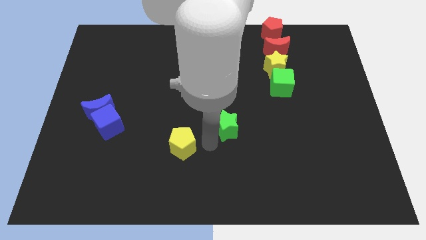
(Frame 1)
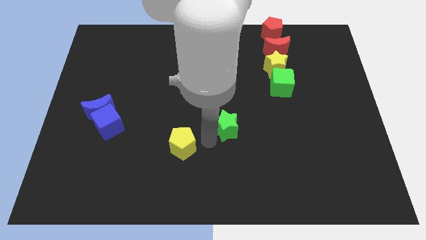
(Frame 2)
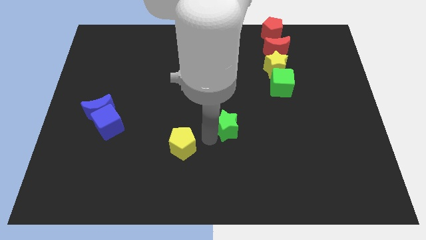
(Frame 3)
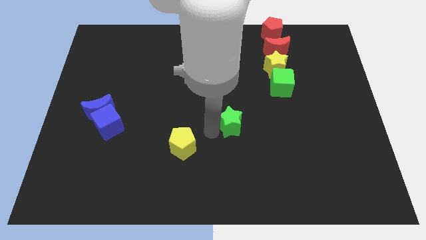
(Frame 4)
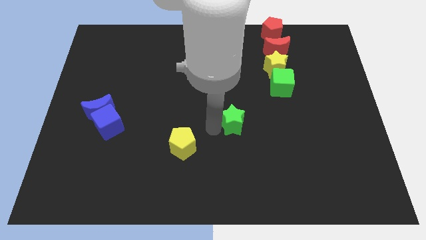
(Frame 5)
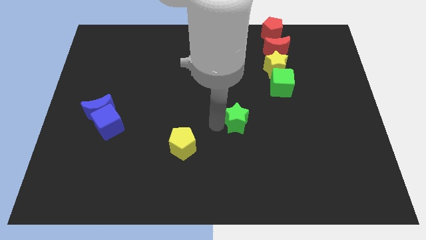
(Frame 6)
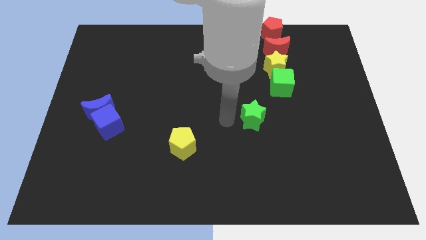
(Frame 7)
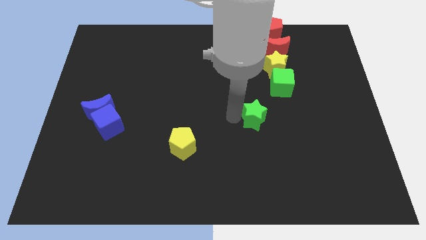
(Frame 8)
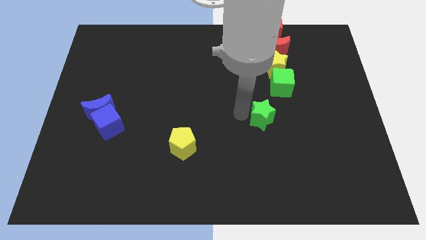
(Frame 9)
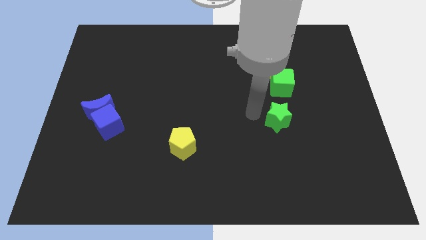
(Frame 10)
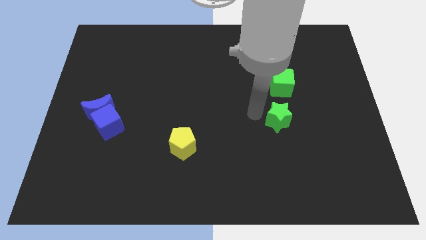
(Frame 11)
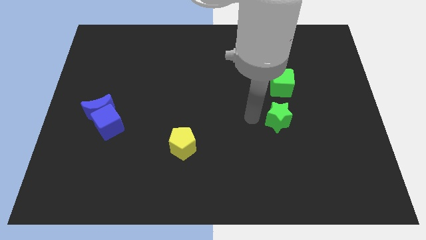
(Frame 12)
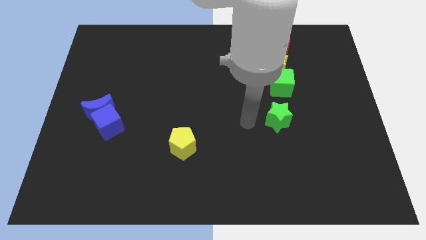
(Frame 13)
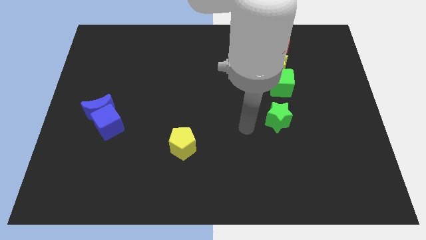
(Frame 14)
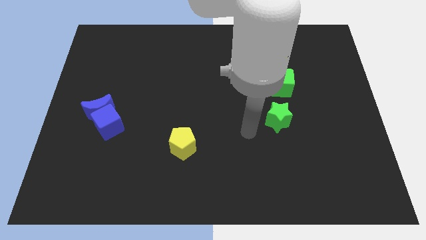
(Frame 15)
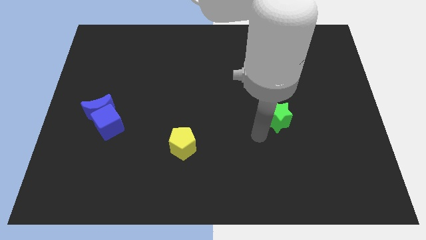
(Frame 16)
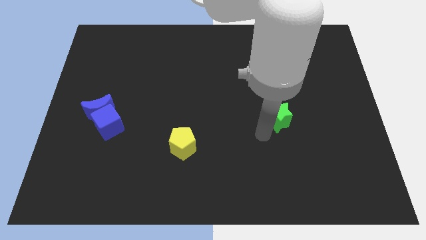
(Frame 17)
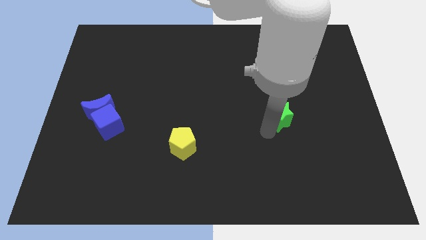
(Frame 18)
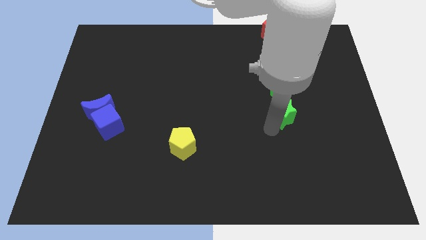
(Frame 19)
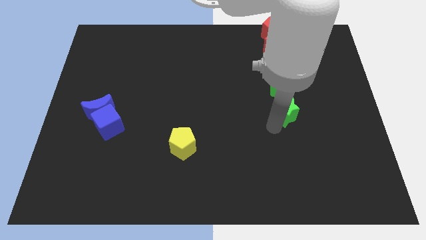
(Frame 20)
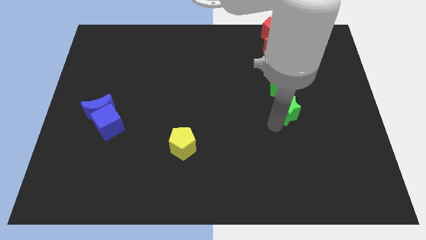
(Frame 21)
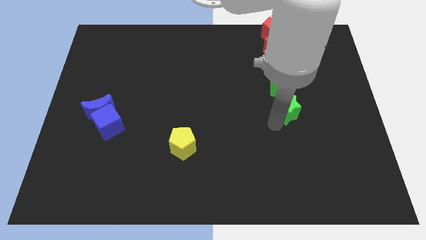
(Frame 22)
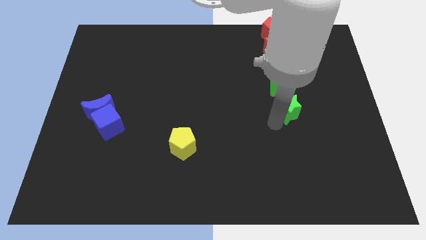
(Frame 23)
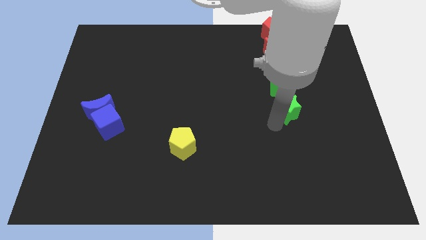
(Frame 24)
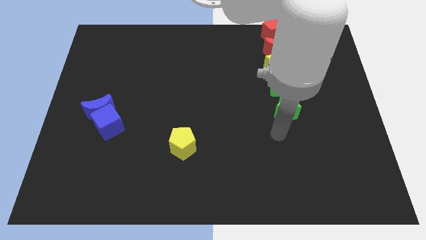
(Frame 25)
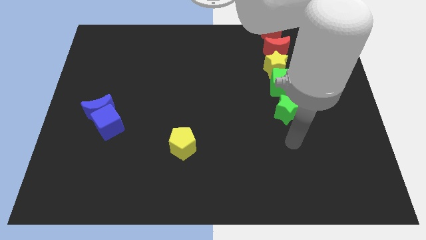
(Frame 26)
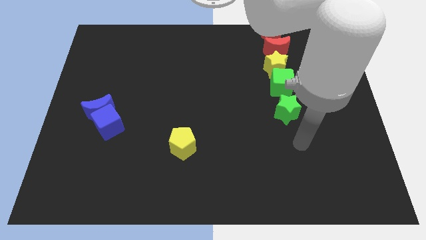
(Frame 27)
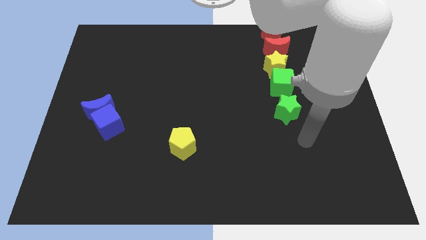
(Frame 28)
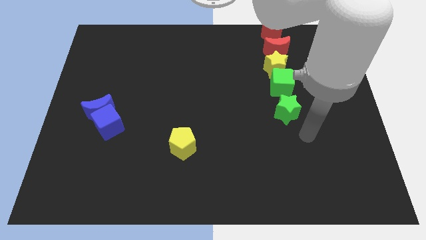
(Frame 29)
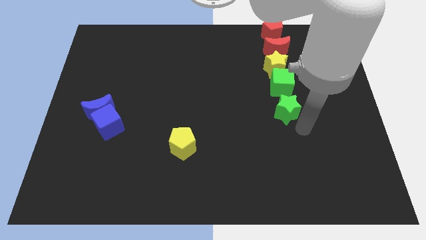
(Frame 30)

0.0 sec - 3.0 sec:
place green star below blue cube

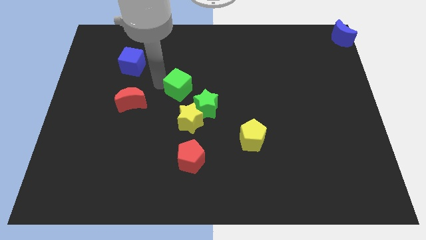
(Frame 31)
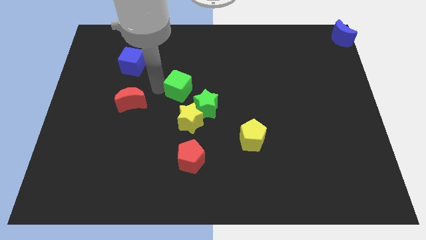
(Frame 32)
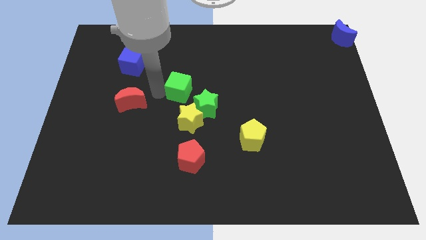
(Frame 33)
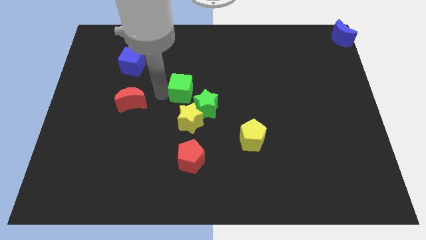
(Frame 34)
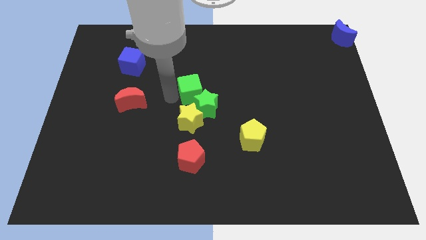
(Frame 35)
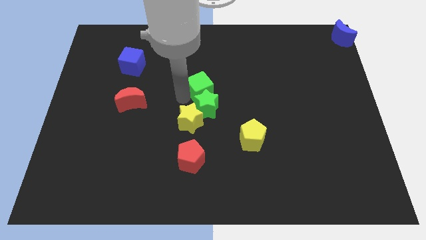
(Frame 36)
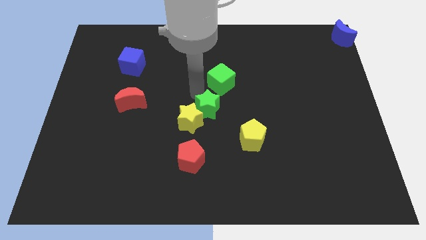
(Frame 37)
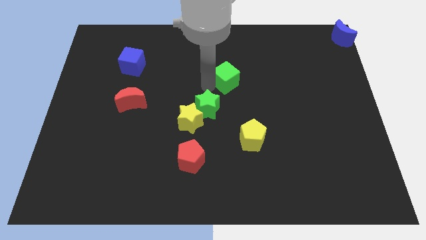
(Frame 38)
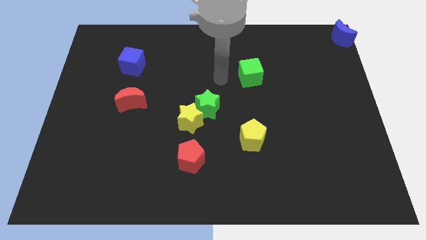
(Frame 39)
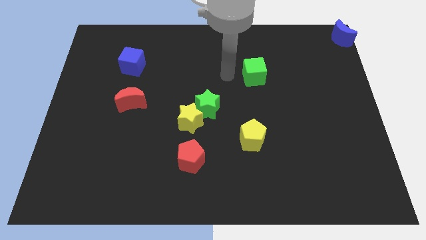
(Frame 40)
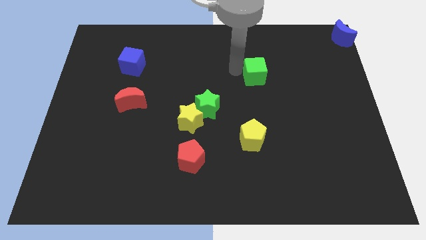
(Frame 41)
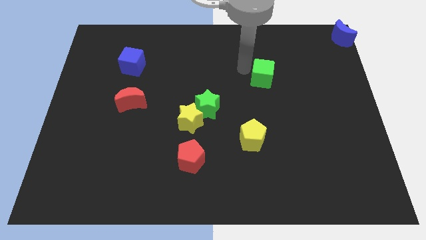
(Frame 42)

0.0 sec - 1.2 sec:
move the green cube in between green star and blue moon

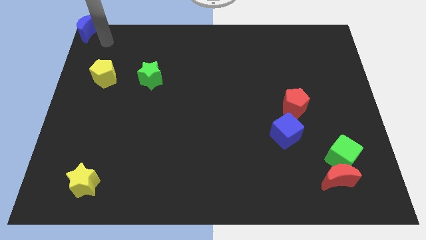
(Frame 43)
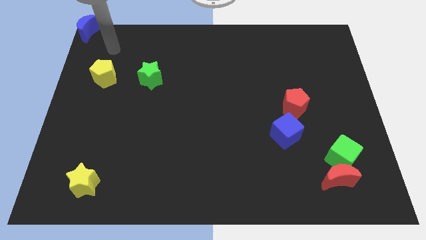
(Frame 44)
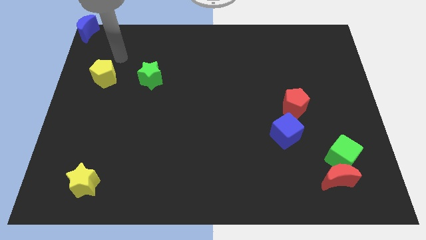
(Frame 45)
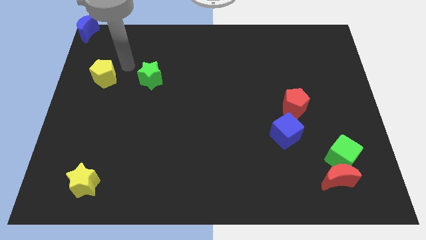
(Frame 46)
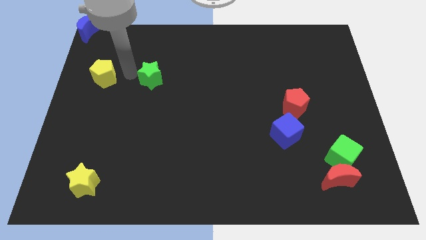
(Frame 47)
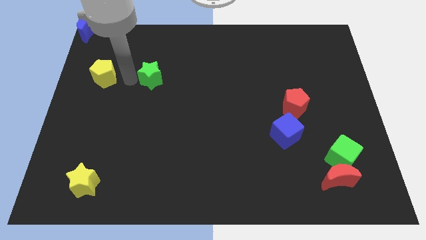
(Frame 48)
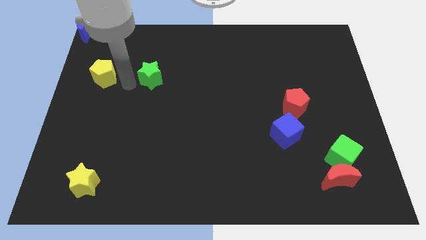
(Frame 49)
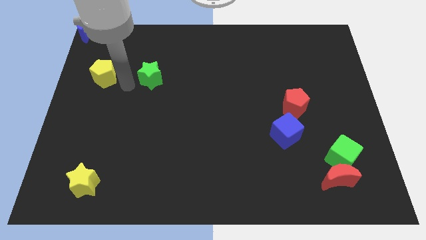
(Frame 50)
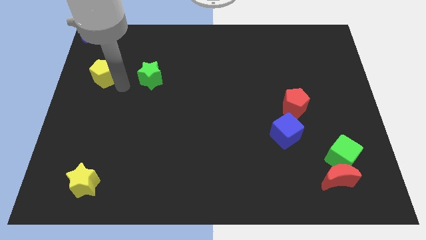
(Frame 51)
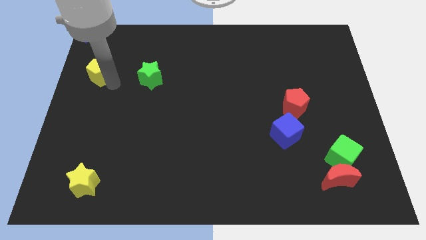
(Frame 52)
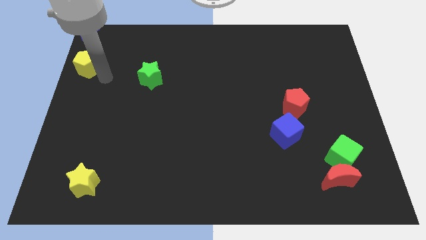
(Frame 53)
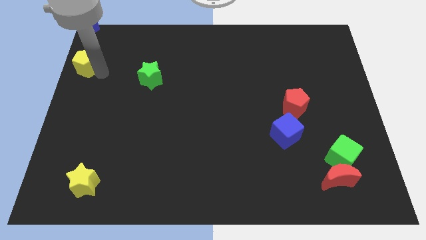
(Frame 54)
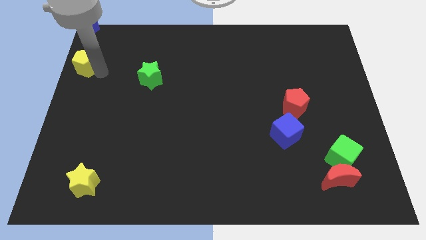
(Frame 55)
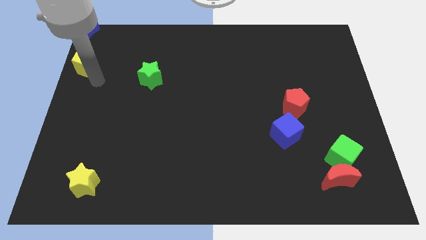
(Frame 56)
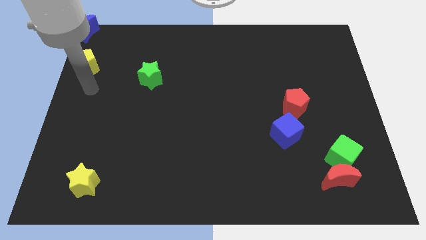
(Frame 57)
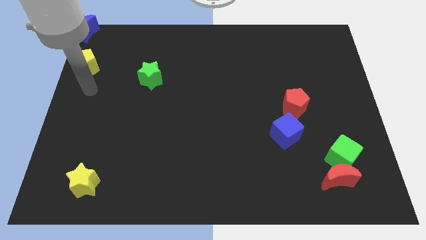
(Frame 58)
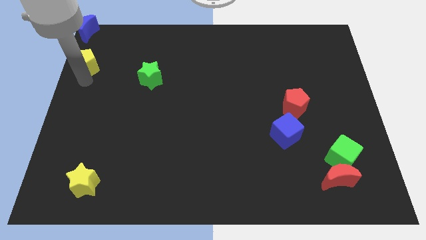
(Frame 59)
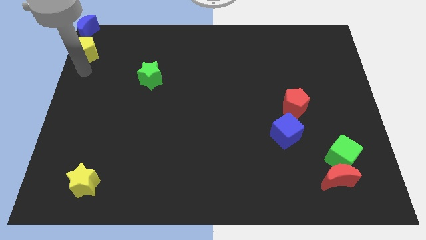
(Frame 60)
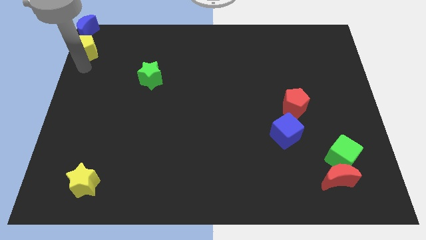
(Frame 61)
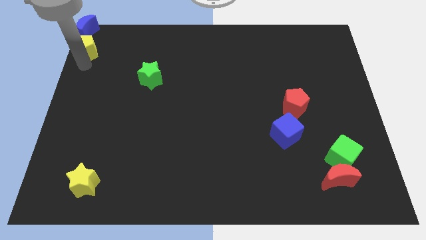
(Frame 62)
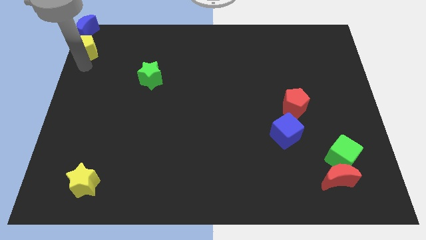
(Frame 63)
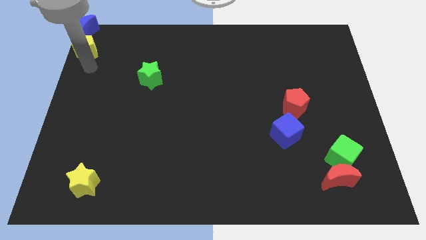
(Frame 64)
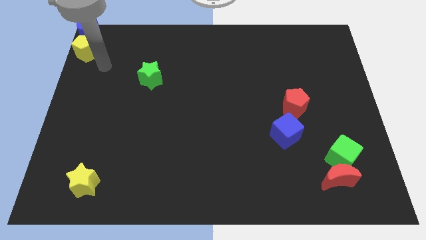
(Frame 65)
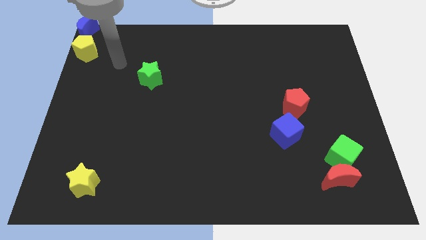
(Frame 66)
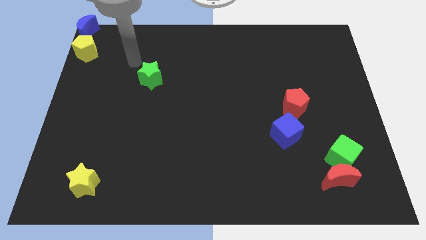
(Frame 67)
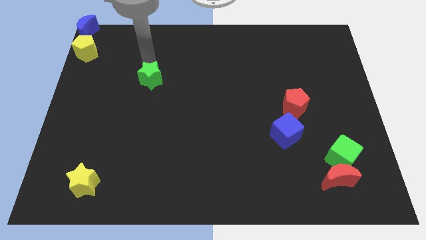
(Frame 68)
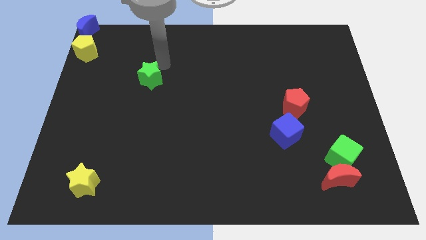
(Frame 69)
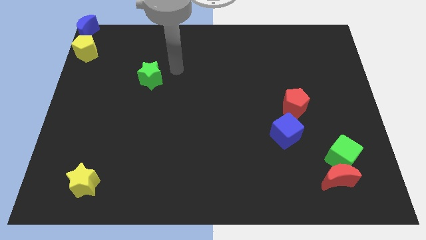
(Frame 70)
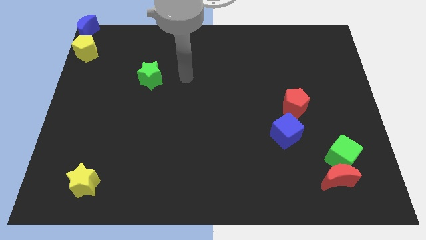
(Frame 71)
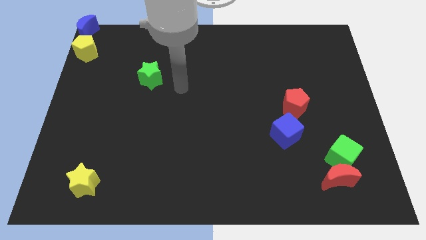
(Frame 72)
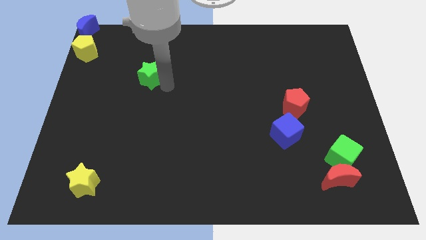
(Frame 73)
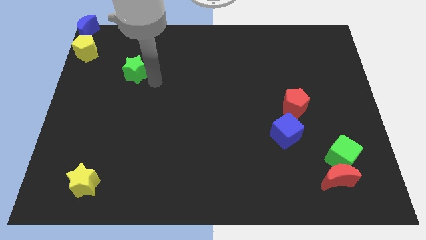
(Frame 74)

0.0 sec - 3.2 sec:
move the yellow pentagon to the bottom of the blue crescent

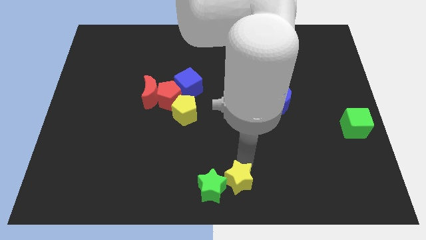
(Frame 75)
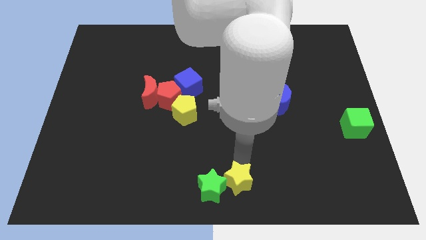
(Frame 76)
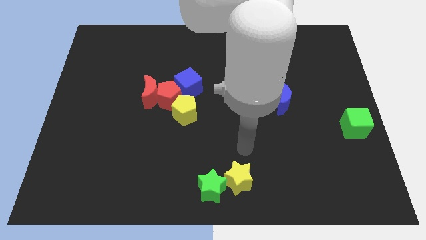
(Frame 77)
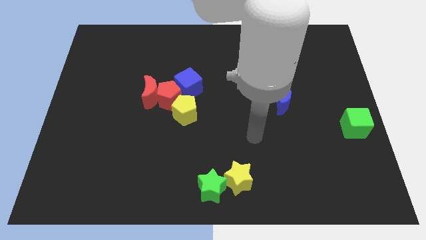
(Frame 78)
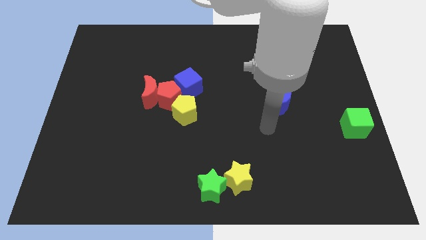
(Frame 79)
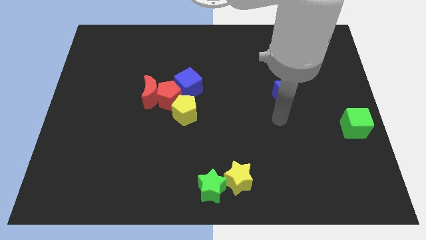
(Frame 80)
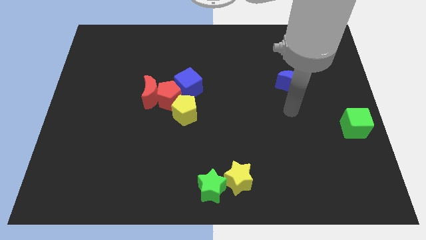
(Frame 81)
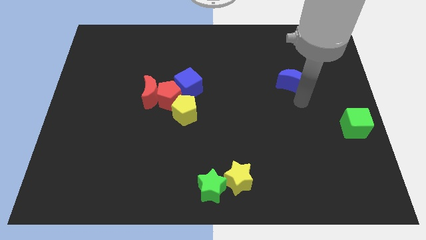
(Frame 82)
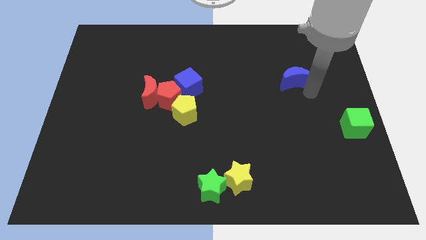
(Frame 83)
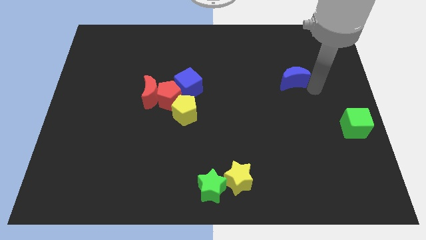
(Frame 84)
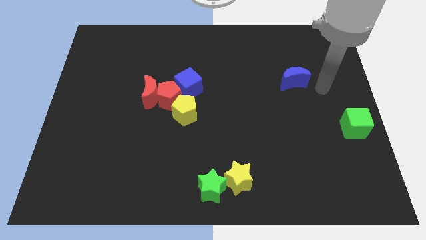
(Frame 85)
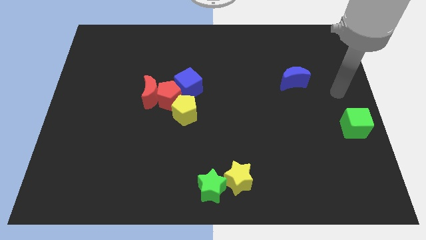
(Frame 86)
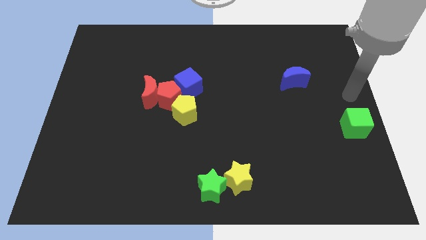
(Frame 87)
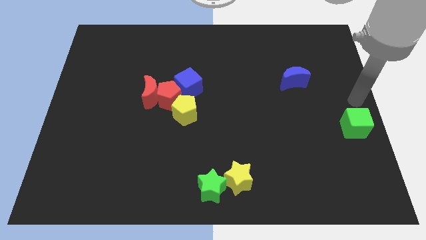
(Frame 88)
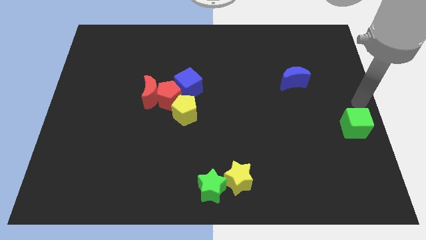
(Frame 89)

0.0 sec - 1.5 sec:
slightly move the blue moon to the right top
